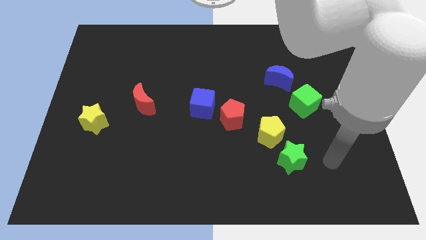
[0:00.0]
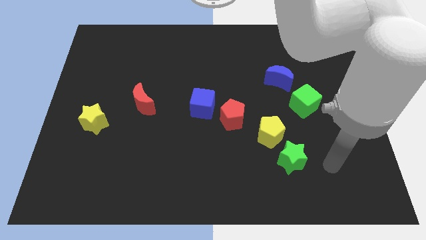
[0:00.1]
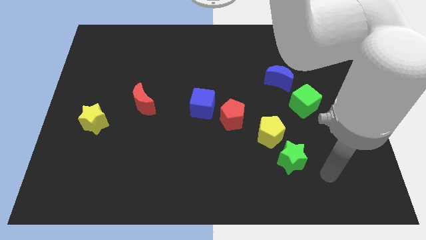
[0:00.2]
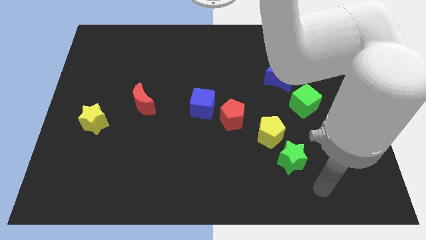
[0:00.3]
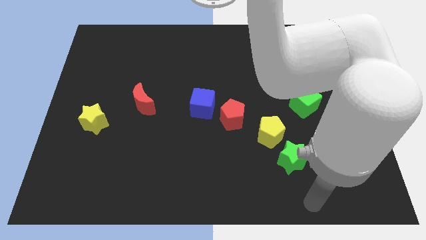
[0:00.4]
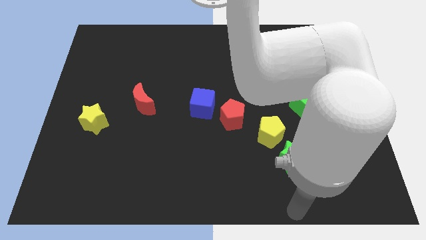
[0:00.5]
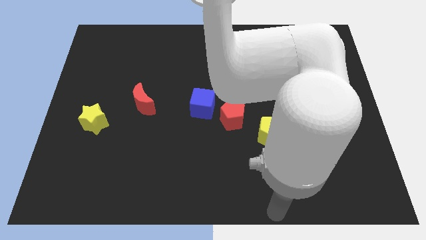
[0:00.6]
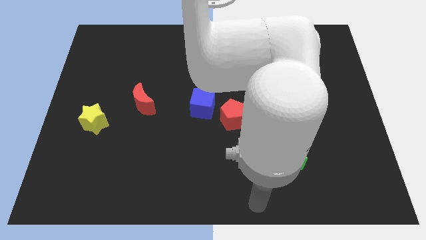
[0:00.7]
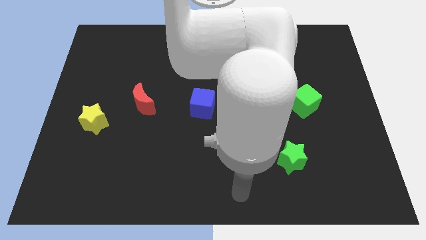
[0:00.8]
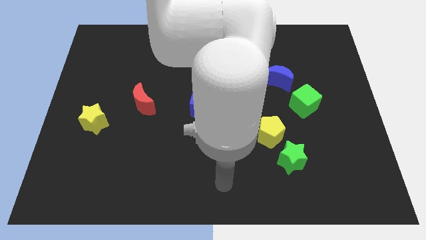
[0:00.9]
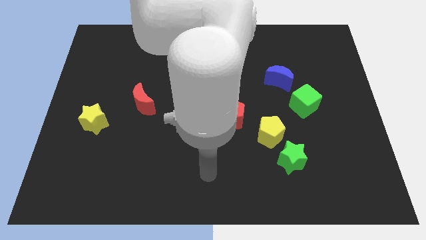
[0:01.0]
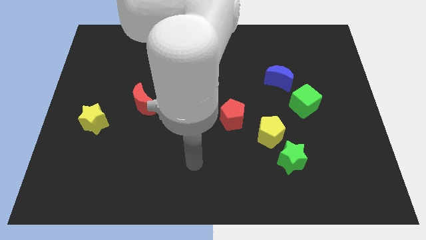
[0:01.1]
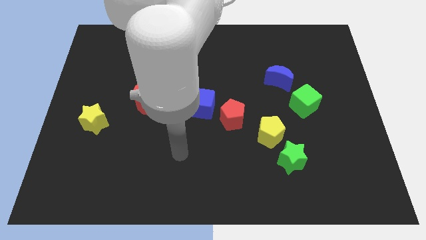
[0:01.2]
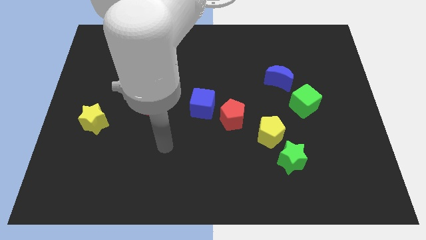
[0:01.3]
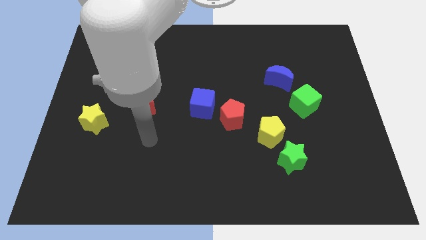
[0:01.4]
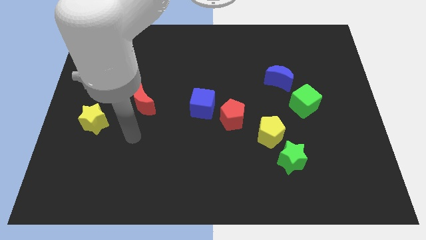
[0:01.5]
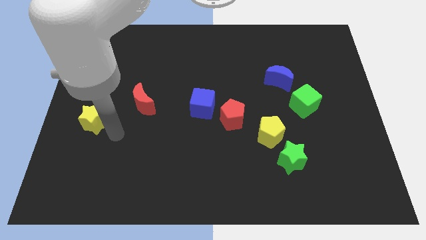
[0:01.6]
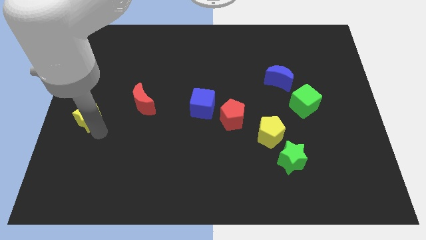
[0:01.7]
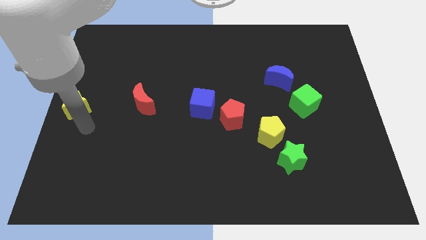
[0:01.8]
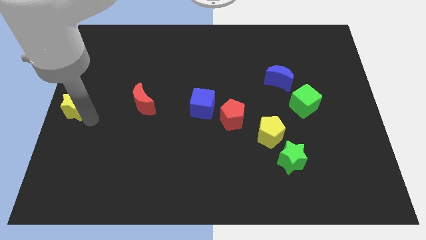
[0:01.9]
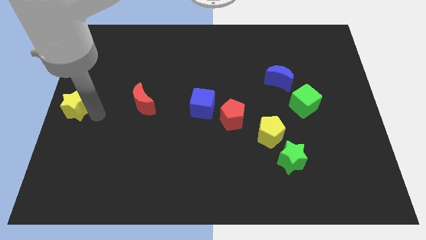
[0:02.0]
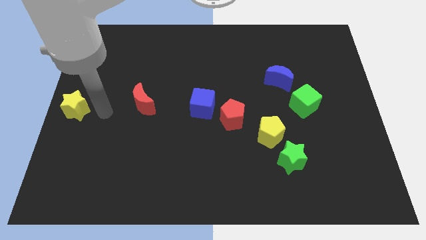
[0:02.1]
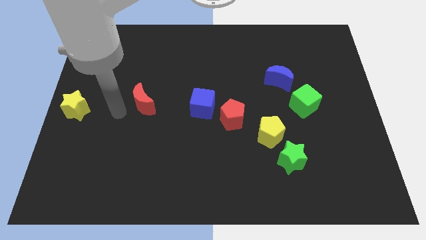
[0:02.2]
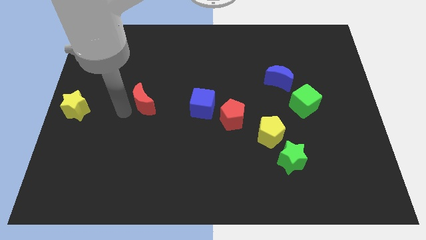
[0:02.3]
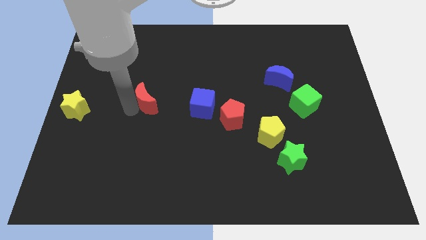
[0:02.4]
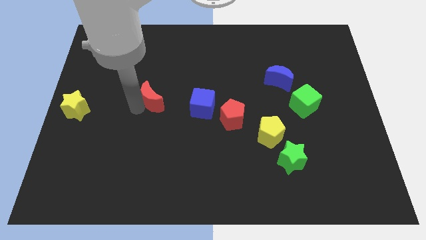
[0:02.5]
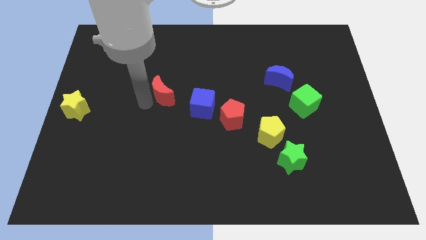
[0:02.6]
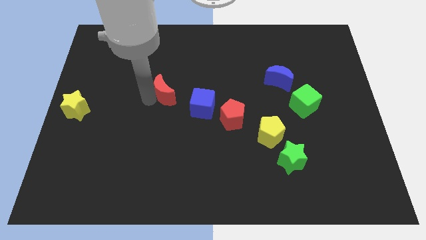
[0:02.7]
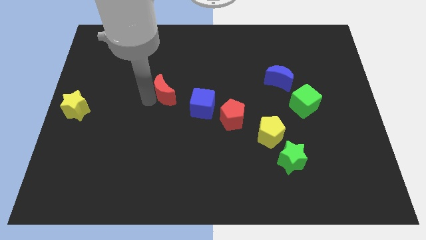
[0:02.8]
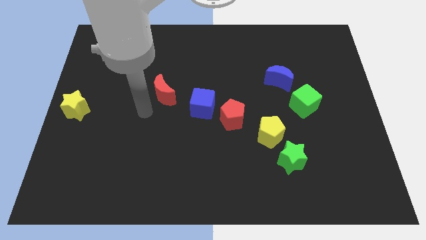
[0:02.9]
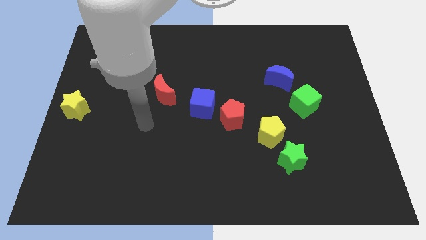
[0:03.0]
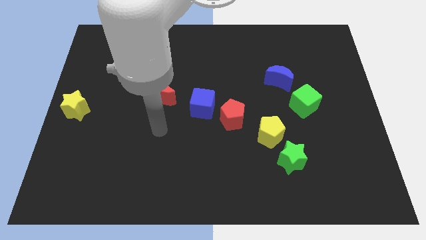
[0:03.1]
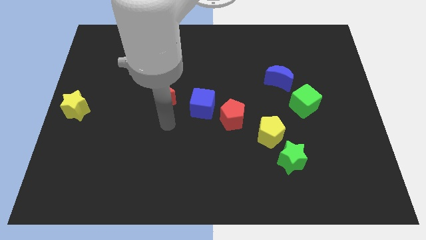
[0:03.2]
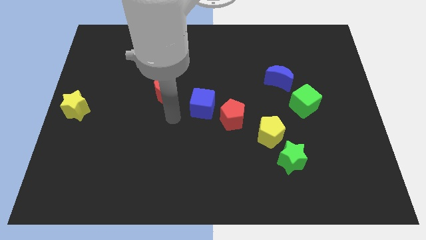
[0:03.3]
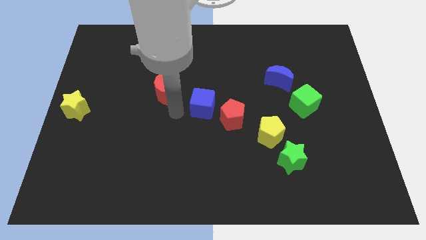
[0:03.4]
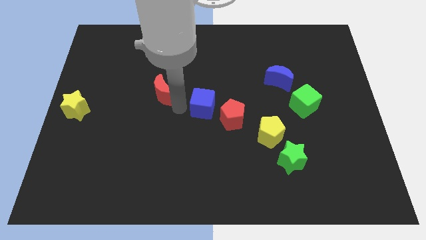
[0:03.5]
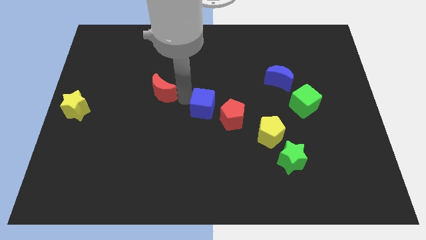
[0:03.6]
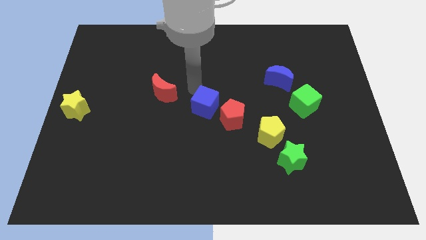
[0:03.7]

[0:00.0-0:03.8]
push the red moon slightly upwards

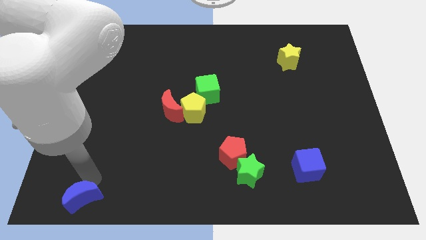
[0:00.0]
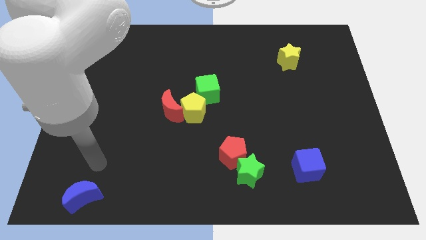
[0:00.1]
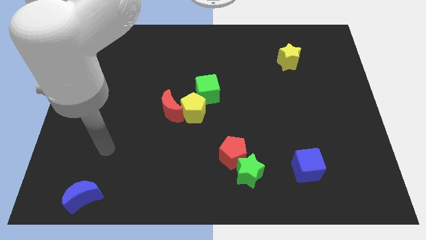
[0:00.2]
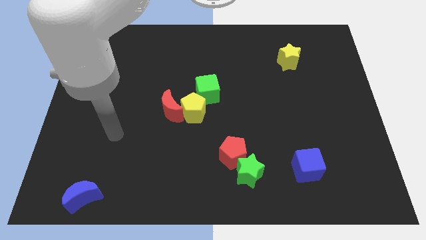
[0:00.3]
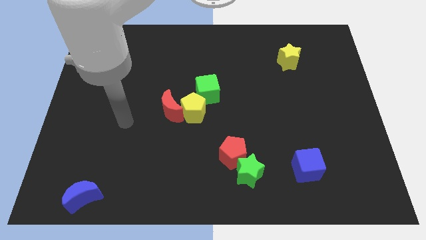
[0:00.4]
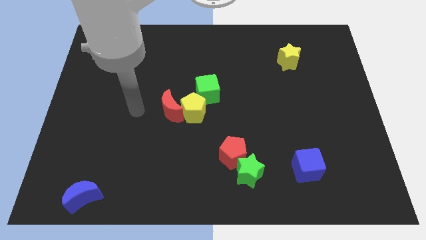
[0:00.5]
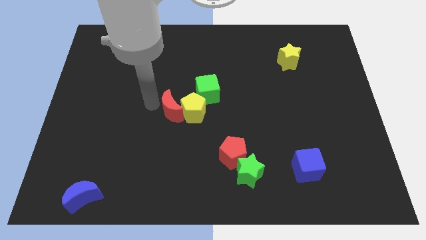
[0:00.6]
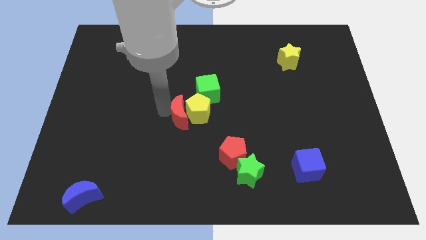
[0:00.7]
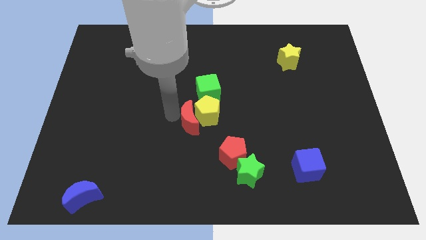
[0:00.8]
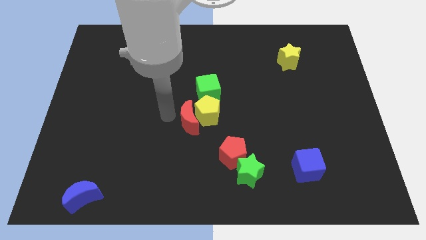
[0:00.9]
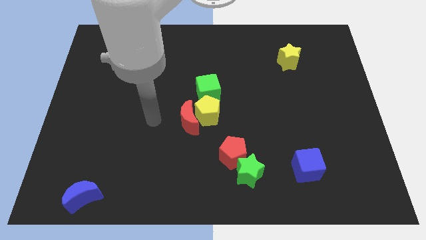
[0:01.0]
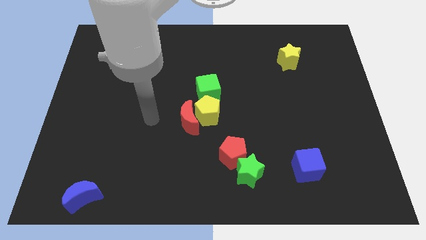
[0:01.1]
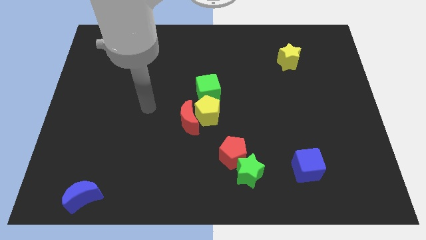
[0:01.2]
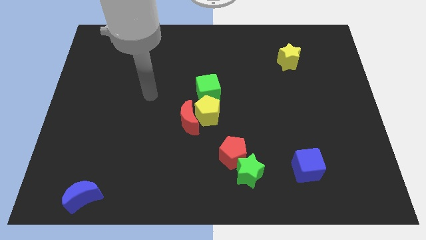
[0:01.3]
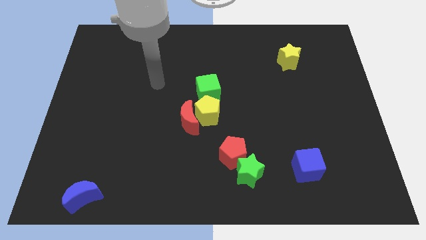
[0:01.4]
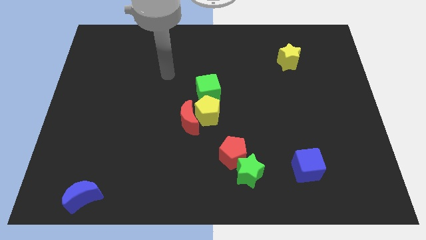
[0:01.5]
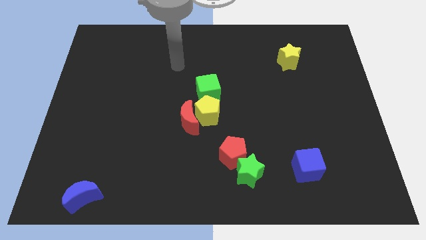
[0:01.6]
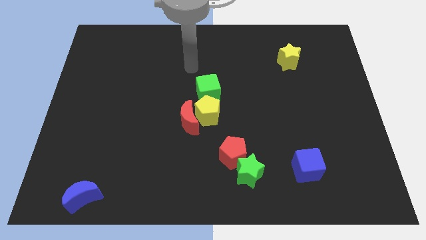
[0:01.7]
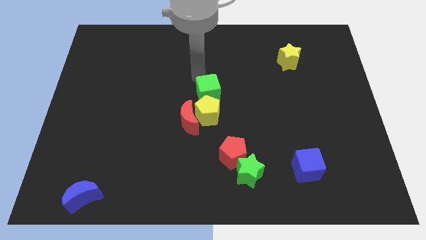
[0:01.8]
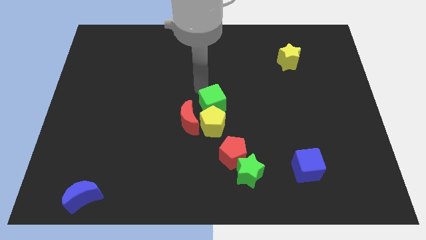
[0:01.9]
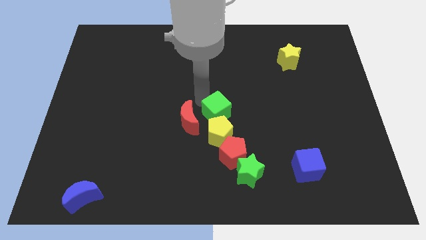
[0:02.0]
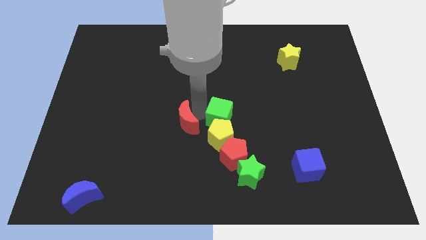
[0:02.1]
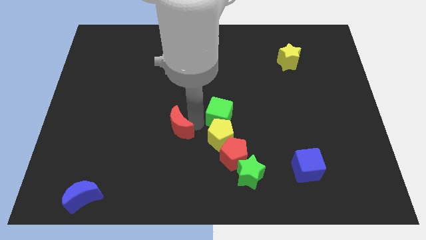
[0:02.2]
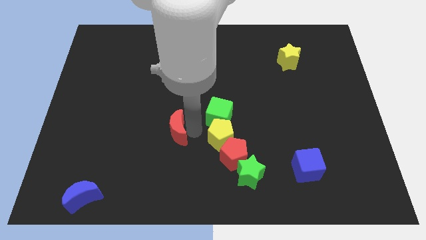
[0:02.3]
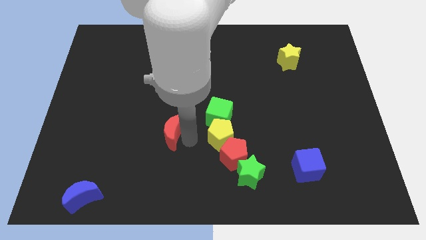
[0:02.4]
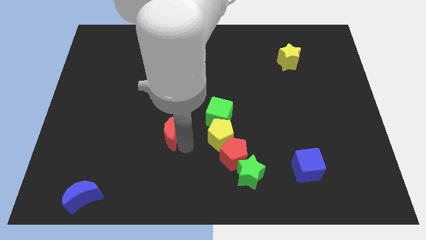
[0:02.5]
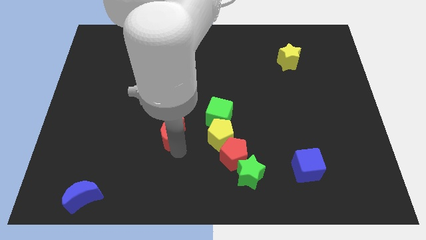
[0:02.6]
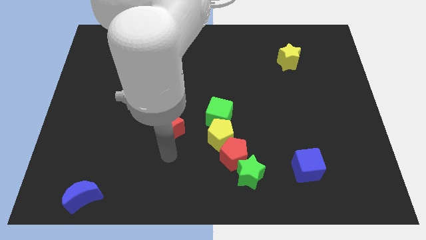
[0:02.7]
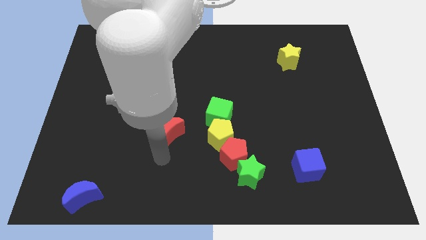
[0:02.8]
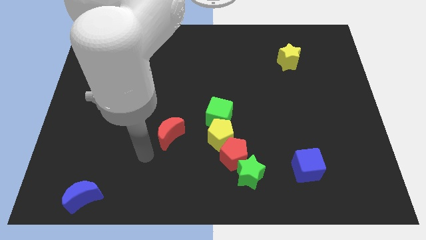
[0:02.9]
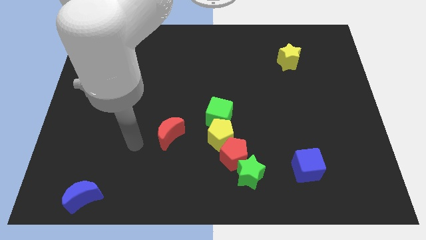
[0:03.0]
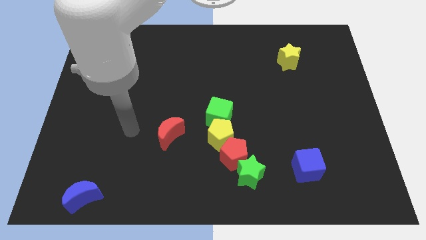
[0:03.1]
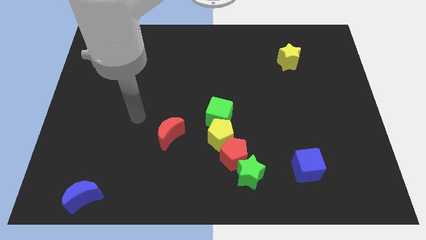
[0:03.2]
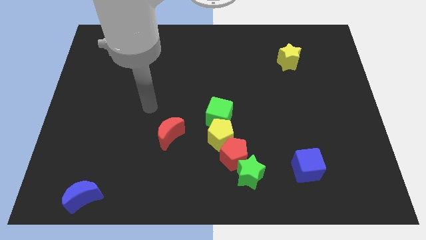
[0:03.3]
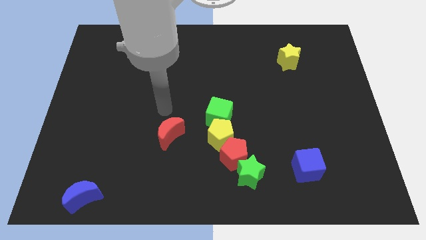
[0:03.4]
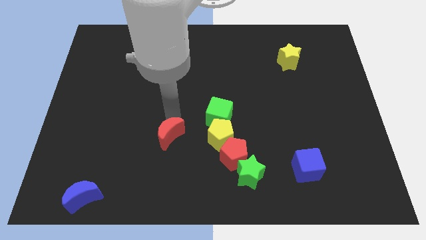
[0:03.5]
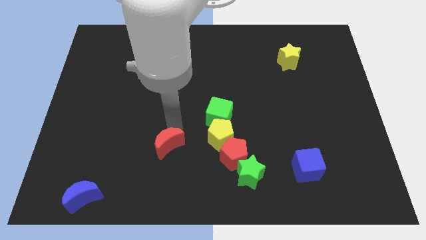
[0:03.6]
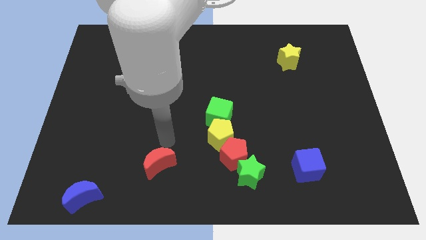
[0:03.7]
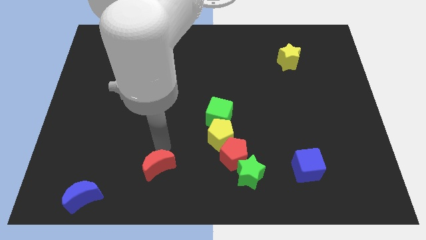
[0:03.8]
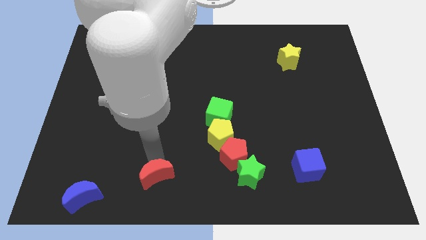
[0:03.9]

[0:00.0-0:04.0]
move your arm away from the blue moon

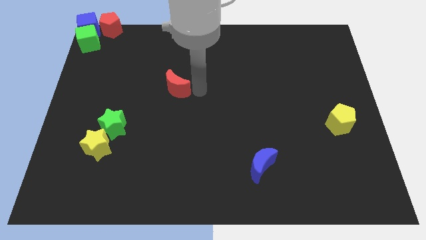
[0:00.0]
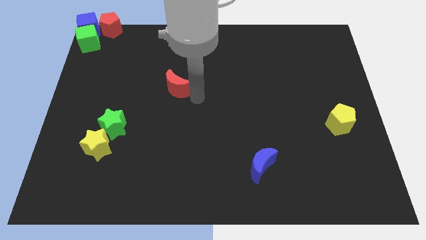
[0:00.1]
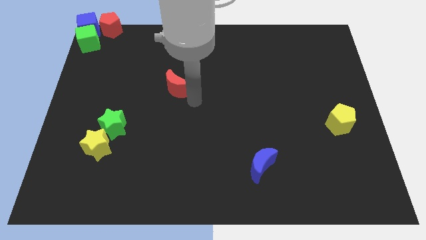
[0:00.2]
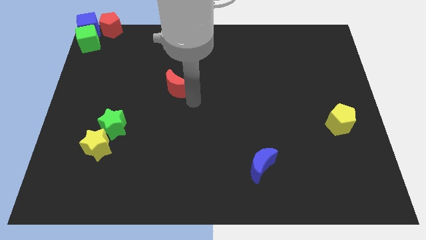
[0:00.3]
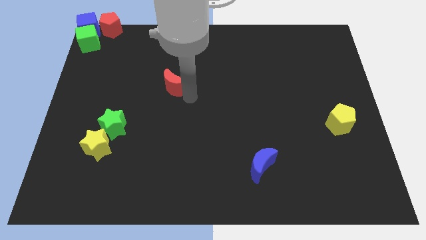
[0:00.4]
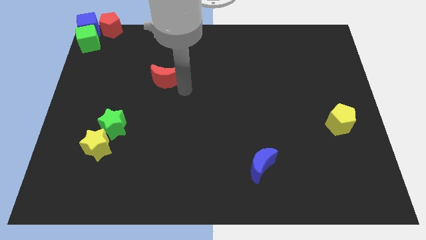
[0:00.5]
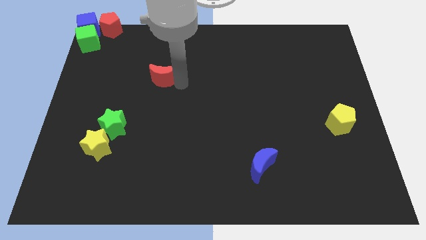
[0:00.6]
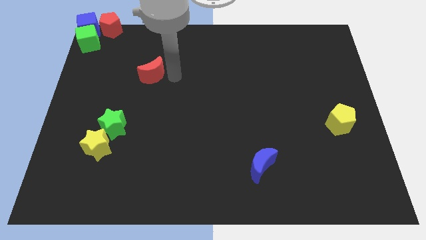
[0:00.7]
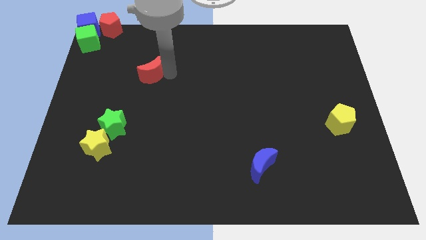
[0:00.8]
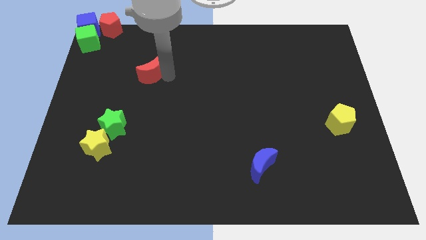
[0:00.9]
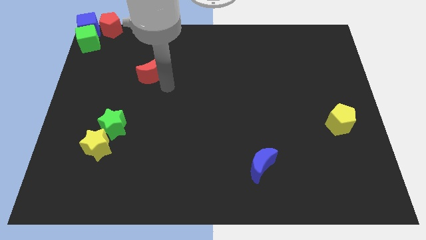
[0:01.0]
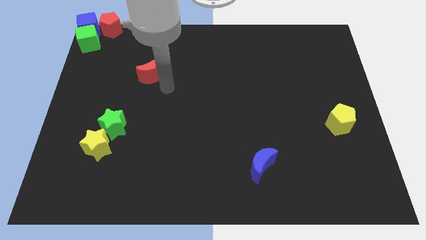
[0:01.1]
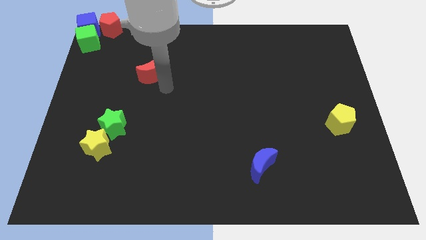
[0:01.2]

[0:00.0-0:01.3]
push the red crescent towards the top left of the board
